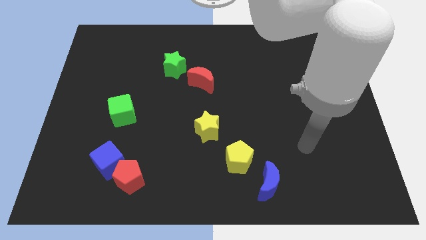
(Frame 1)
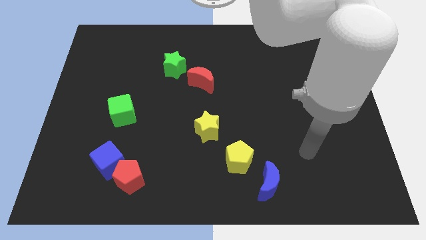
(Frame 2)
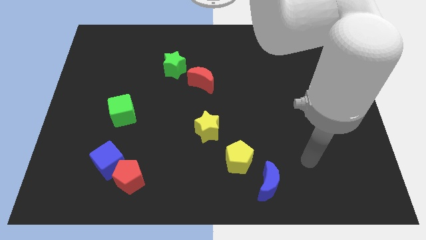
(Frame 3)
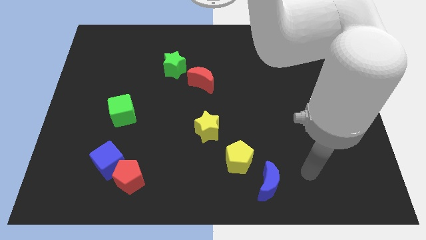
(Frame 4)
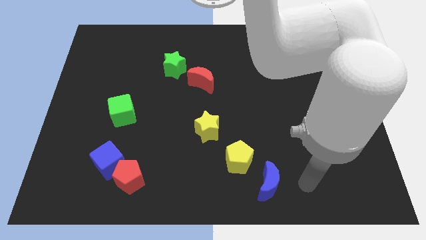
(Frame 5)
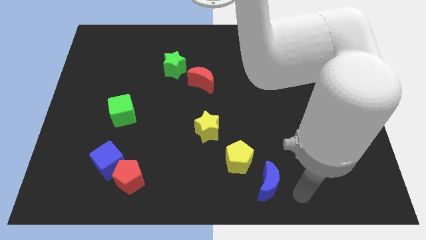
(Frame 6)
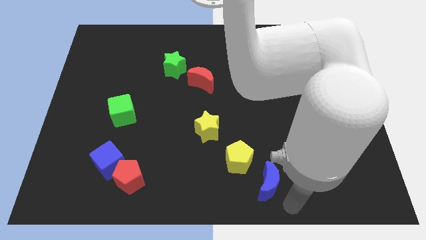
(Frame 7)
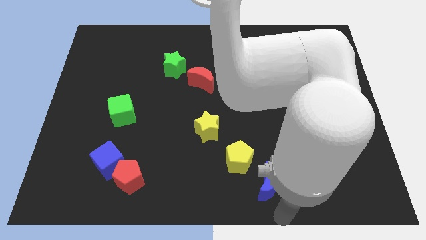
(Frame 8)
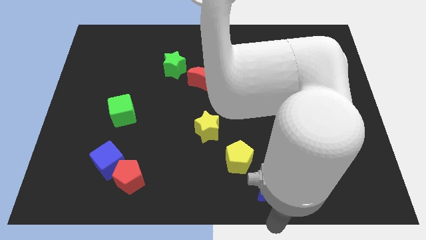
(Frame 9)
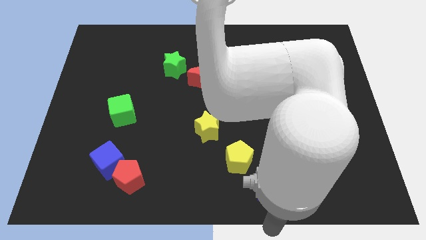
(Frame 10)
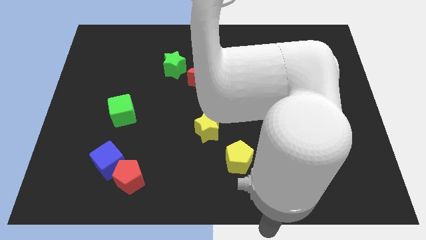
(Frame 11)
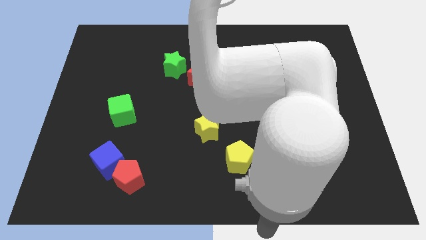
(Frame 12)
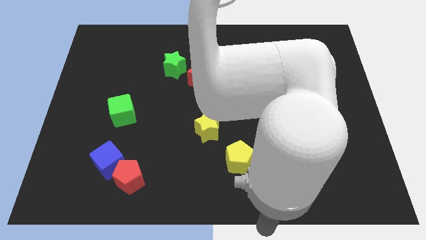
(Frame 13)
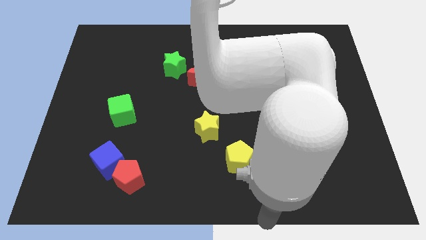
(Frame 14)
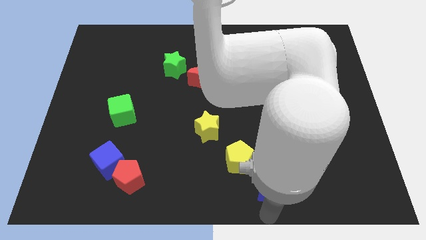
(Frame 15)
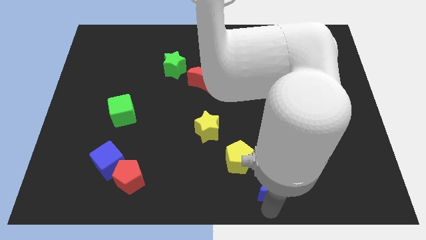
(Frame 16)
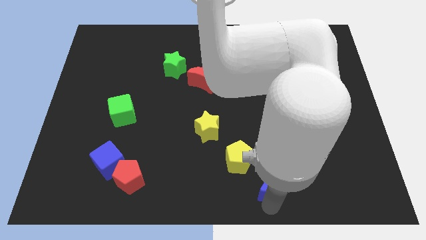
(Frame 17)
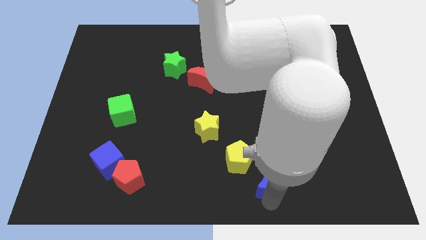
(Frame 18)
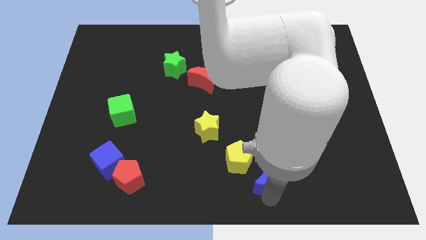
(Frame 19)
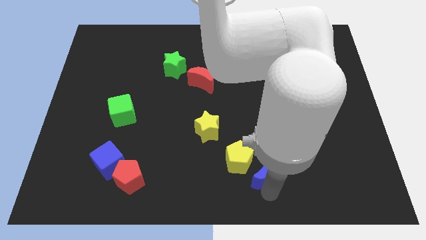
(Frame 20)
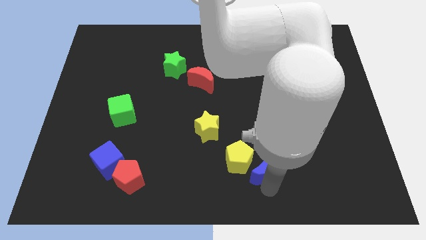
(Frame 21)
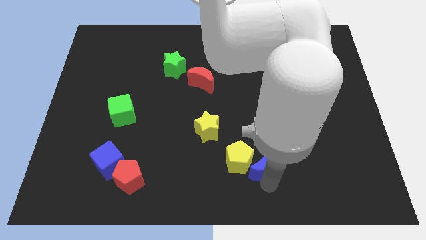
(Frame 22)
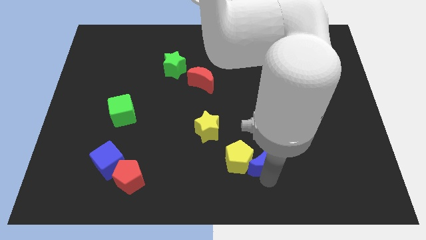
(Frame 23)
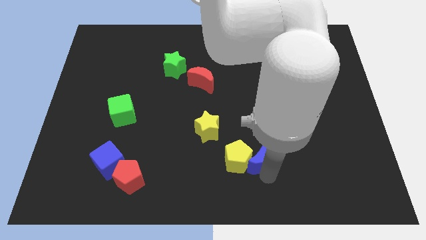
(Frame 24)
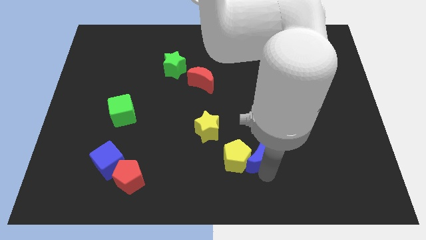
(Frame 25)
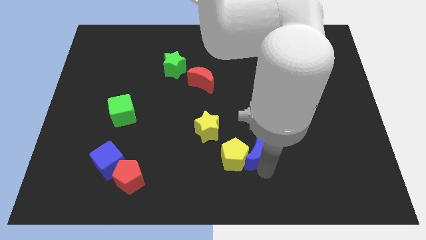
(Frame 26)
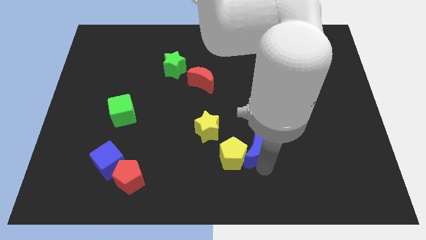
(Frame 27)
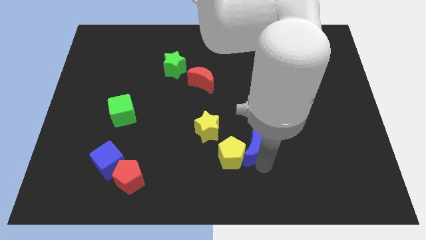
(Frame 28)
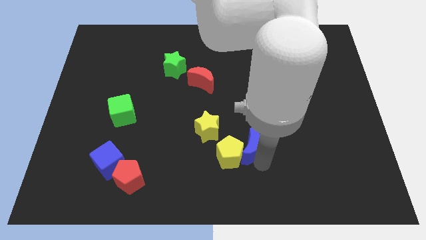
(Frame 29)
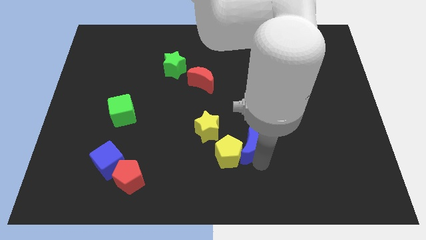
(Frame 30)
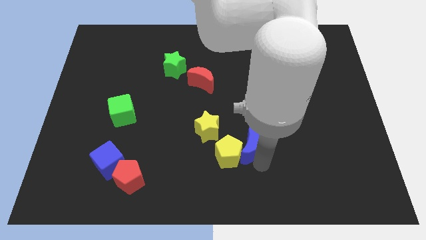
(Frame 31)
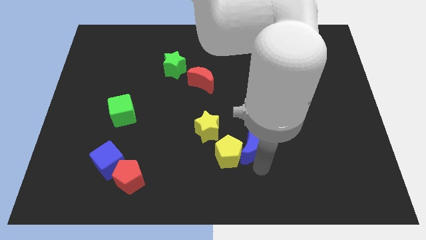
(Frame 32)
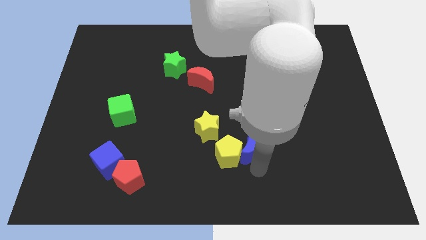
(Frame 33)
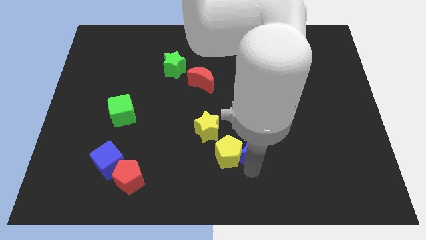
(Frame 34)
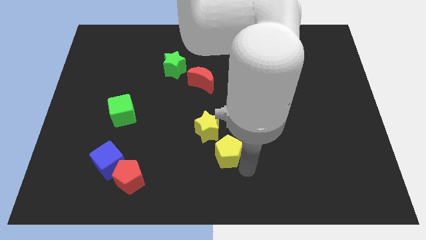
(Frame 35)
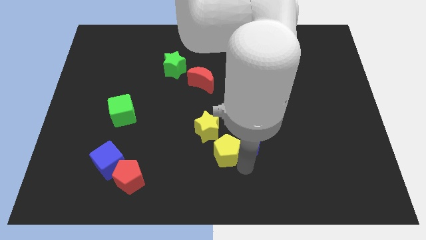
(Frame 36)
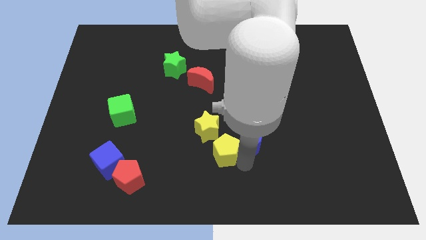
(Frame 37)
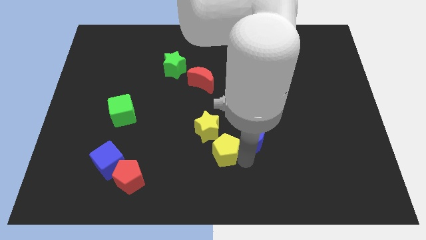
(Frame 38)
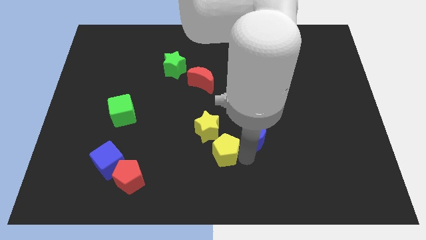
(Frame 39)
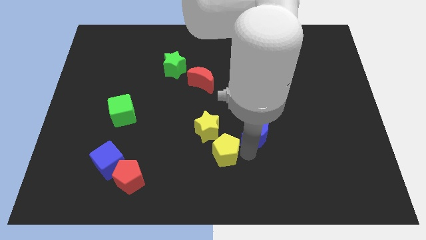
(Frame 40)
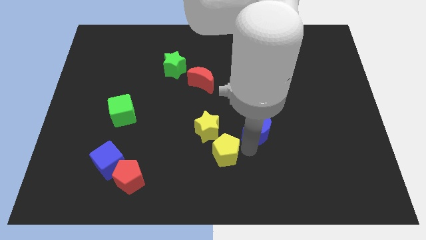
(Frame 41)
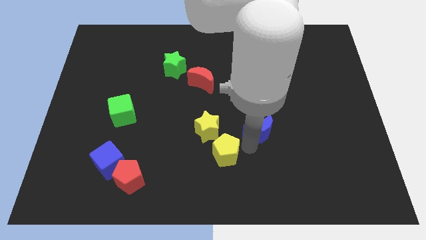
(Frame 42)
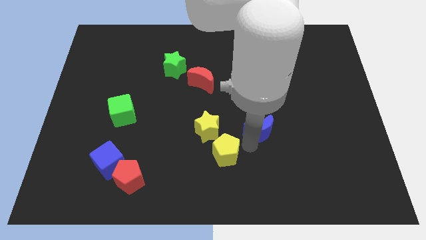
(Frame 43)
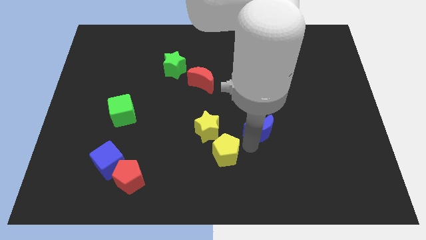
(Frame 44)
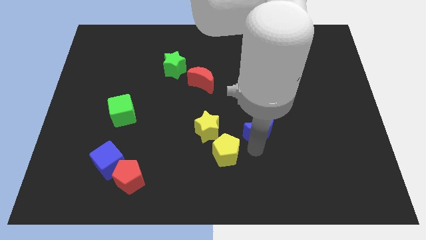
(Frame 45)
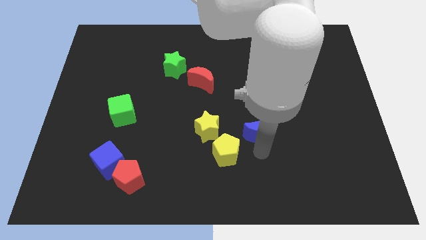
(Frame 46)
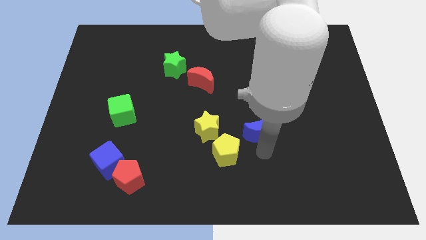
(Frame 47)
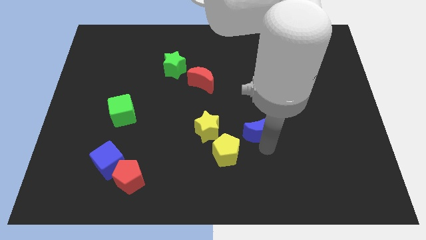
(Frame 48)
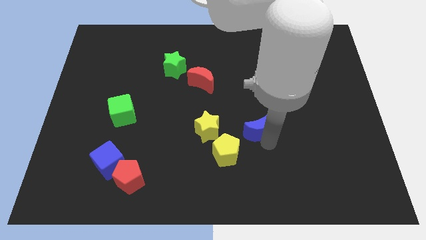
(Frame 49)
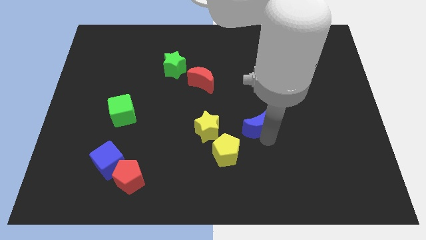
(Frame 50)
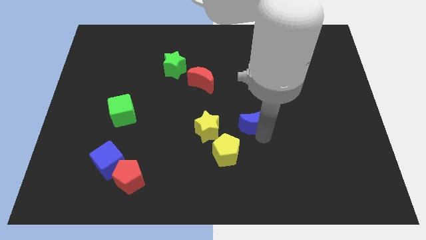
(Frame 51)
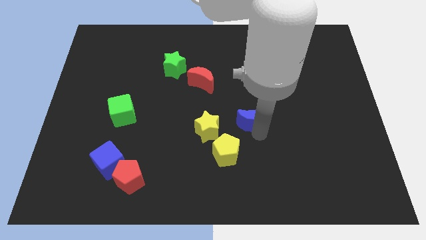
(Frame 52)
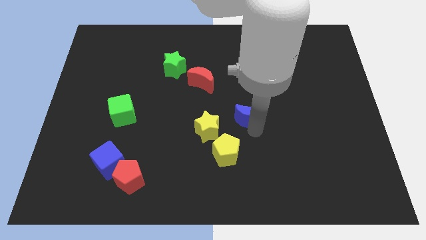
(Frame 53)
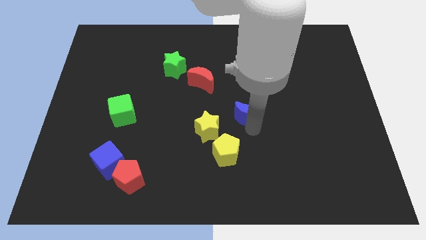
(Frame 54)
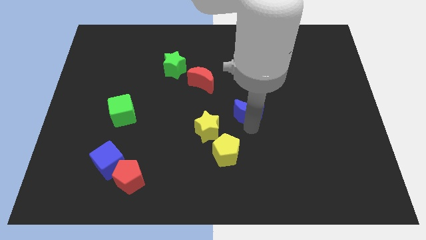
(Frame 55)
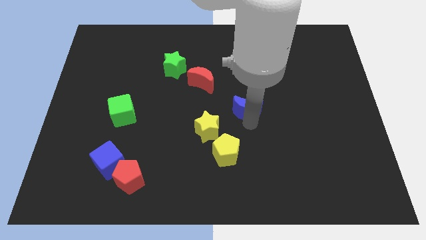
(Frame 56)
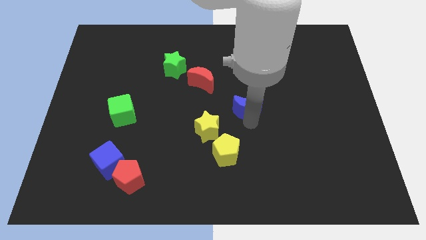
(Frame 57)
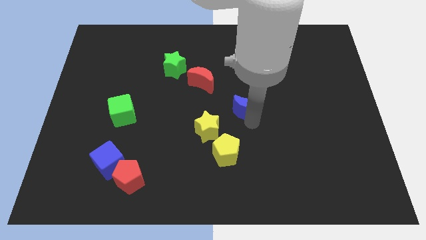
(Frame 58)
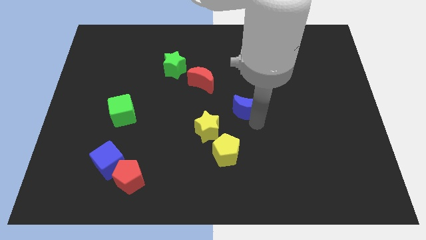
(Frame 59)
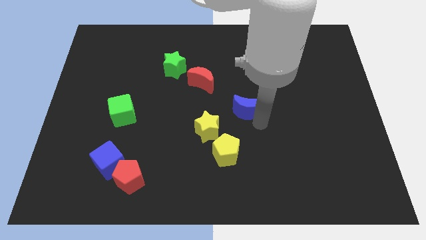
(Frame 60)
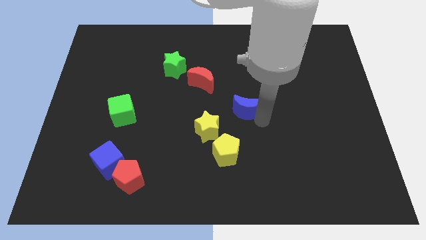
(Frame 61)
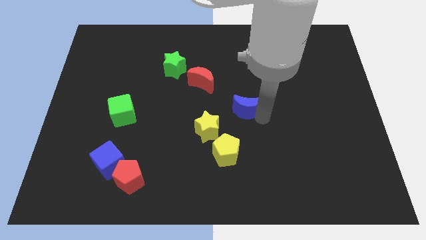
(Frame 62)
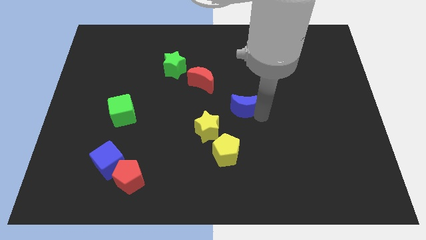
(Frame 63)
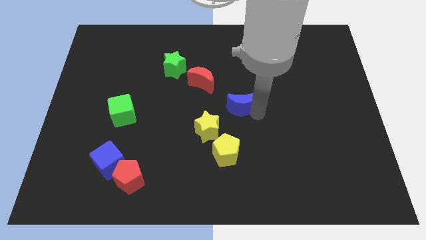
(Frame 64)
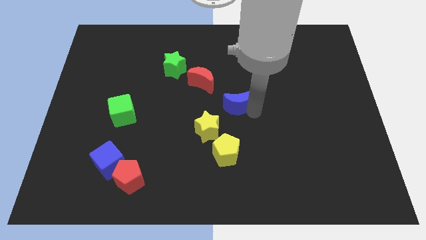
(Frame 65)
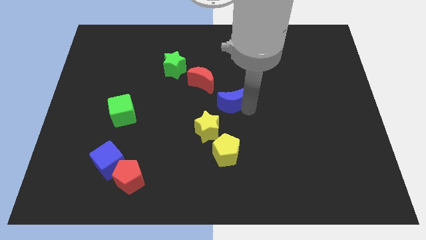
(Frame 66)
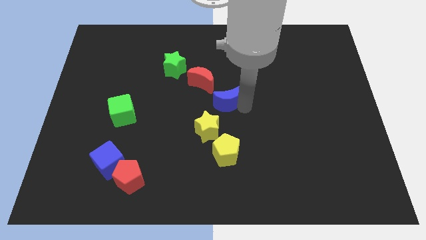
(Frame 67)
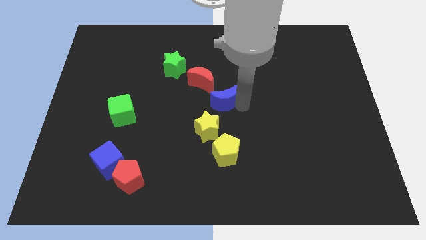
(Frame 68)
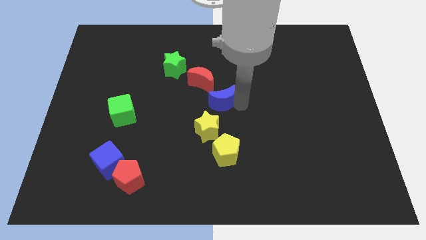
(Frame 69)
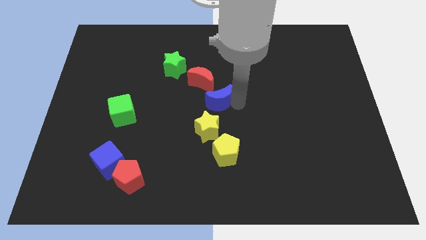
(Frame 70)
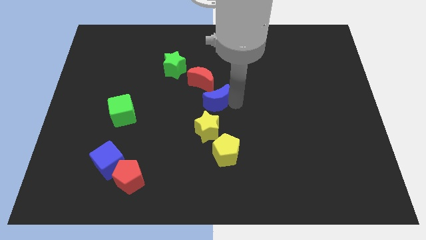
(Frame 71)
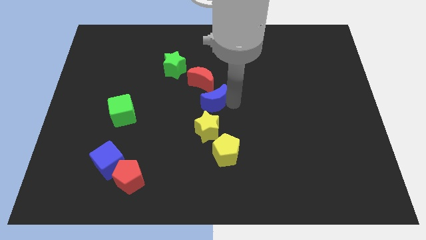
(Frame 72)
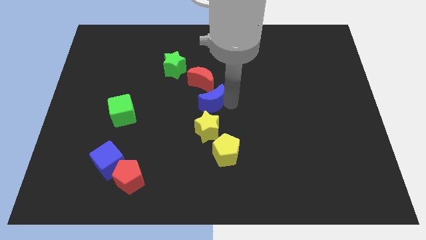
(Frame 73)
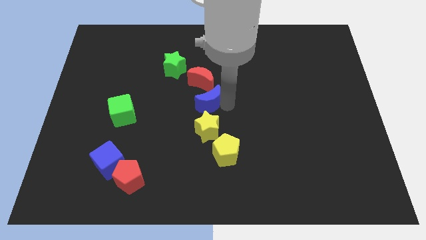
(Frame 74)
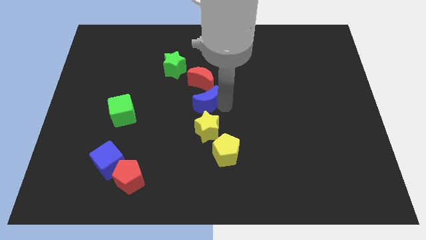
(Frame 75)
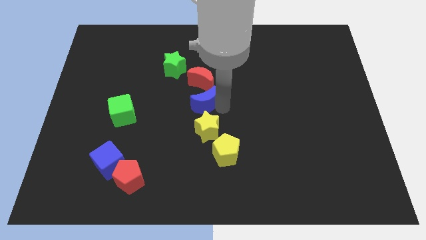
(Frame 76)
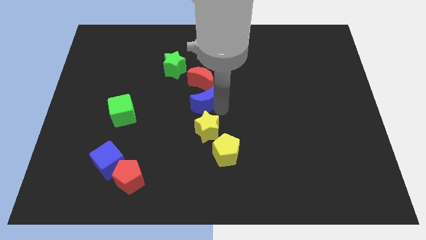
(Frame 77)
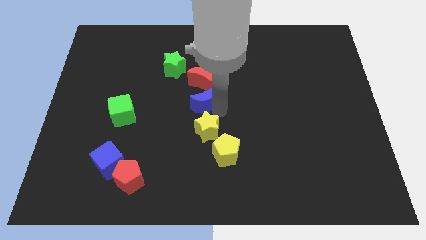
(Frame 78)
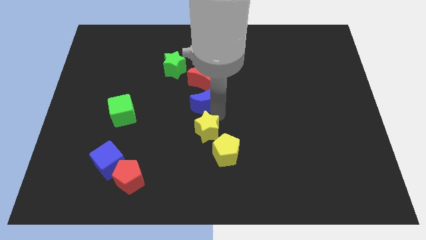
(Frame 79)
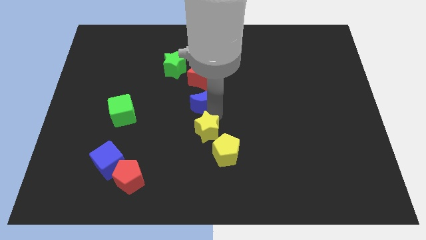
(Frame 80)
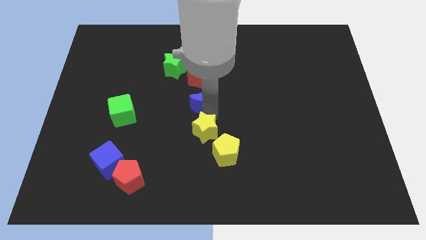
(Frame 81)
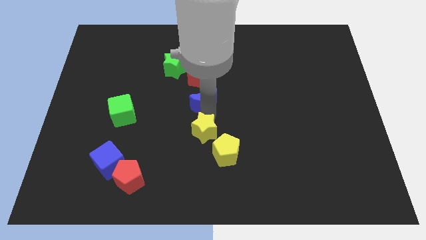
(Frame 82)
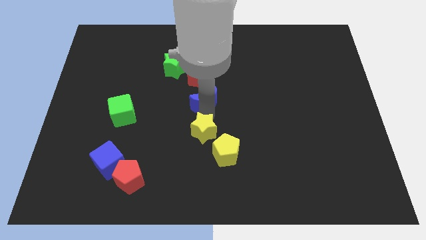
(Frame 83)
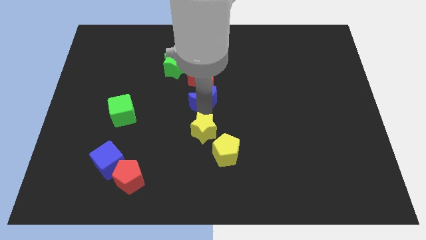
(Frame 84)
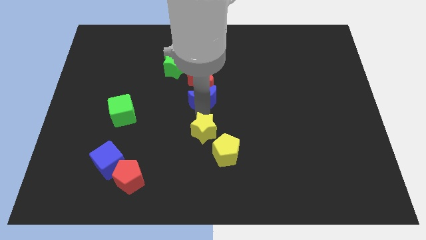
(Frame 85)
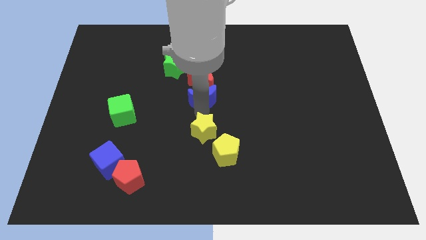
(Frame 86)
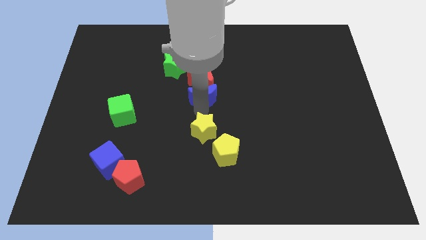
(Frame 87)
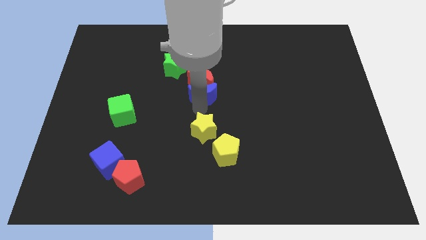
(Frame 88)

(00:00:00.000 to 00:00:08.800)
slide the blue moon close to the red moon
